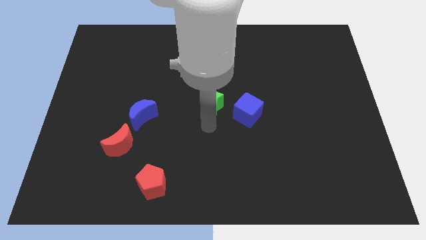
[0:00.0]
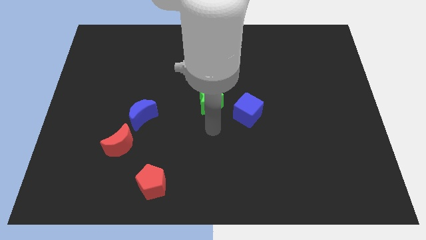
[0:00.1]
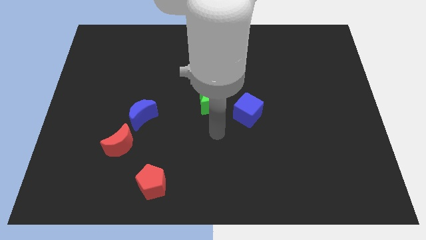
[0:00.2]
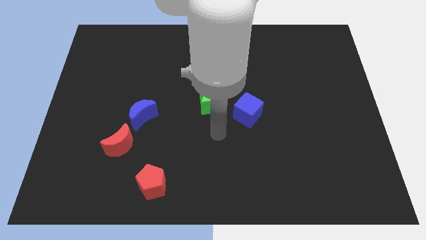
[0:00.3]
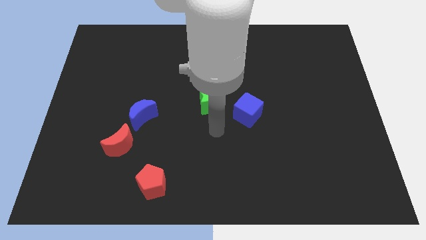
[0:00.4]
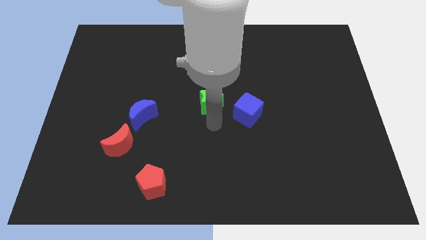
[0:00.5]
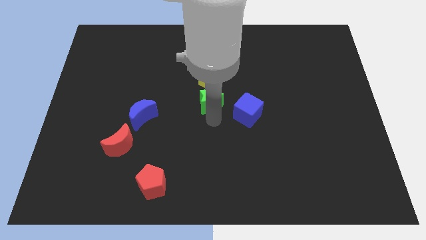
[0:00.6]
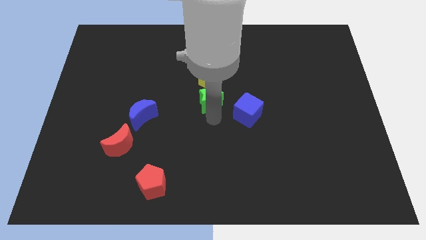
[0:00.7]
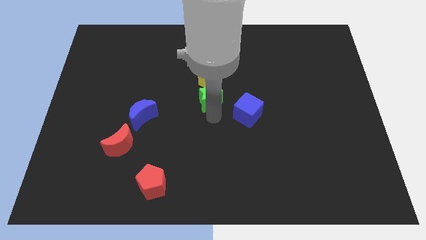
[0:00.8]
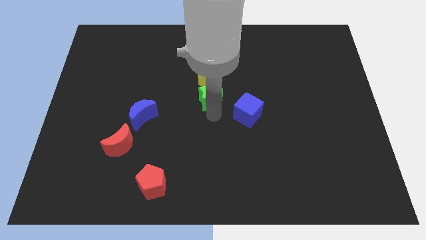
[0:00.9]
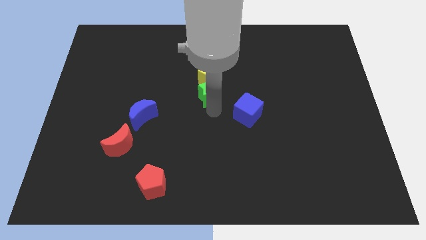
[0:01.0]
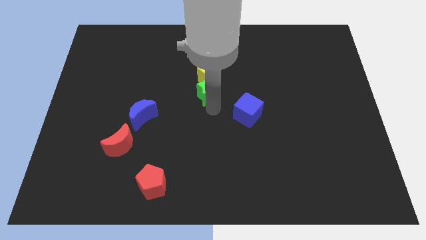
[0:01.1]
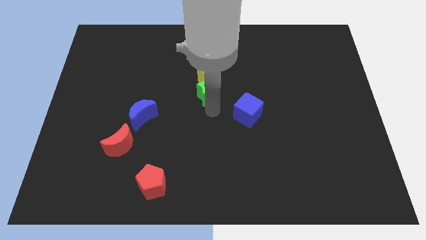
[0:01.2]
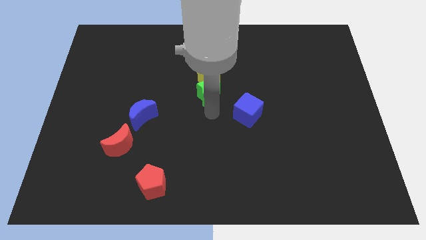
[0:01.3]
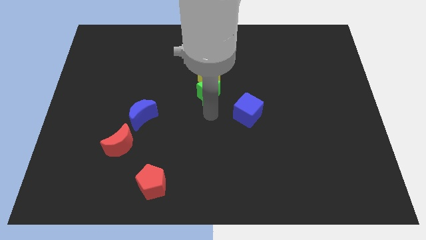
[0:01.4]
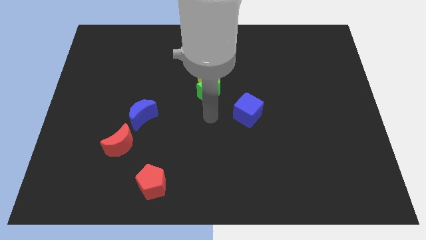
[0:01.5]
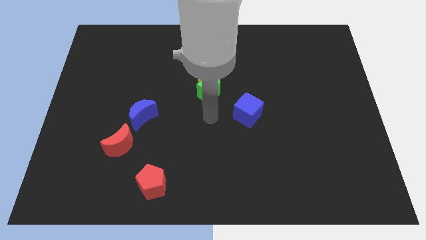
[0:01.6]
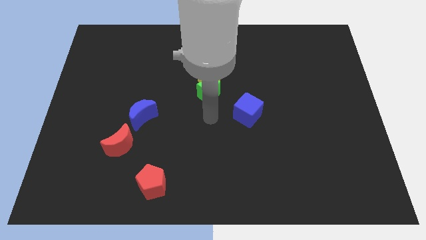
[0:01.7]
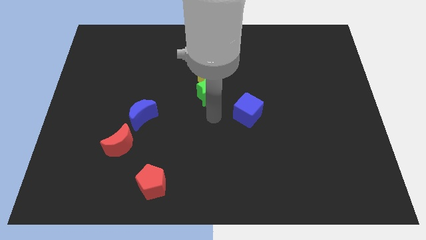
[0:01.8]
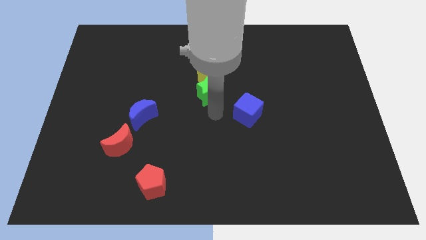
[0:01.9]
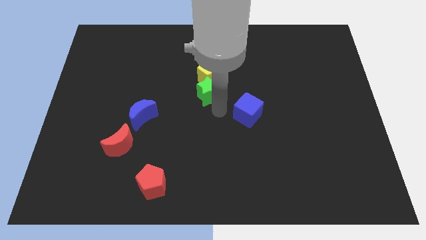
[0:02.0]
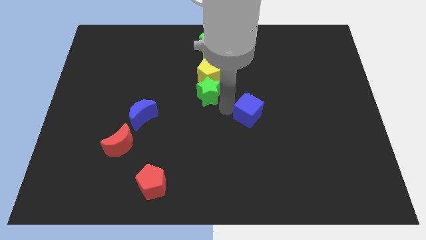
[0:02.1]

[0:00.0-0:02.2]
move the green star into the yellow pentagon

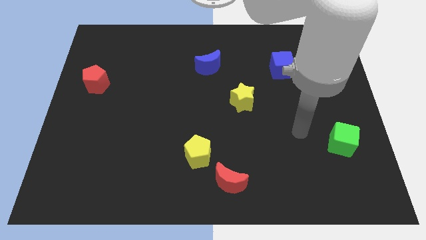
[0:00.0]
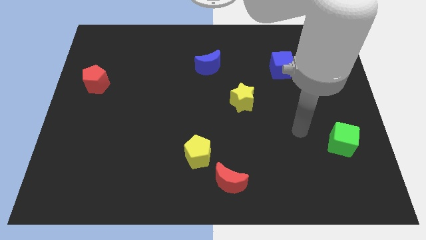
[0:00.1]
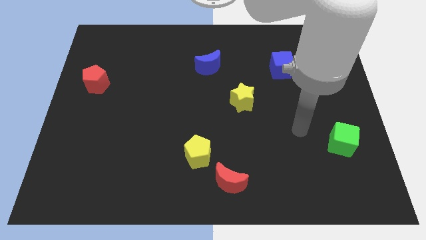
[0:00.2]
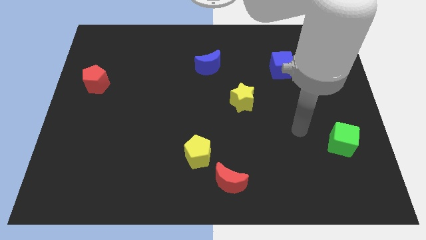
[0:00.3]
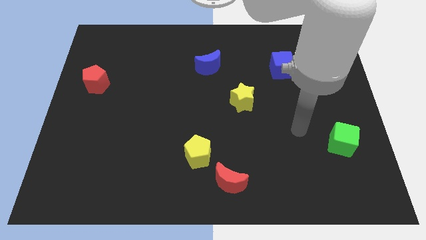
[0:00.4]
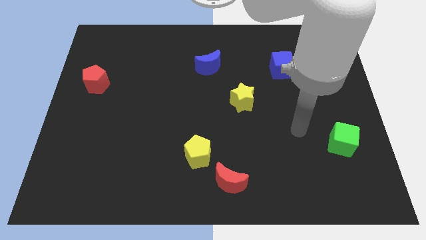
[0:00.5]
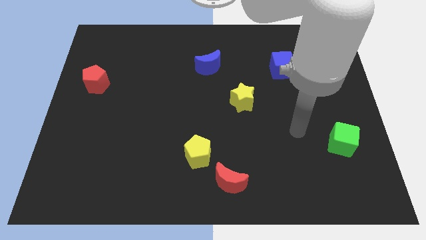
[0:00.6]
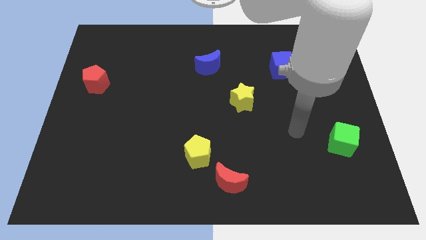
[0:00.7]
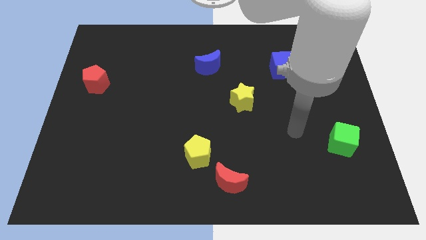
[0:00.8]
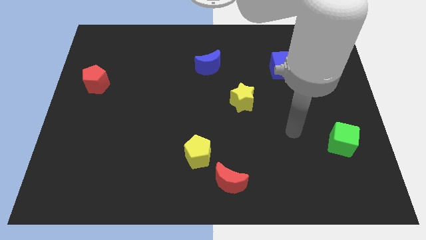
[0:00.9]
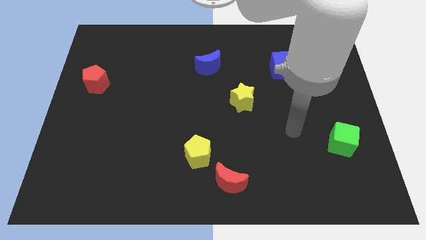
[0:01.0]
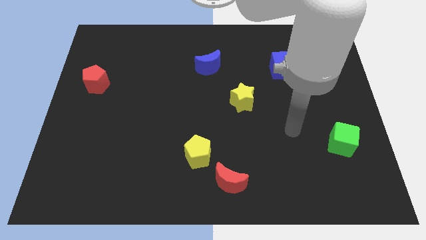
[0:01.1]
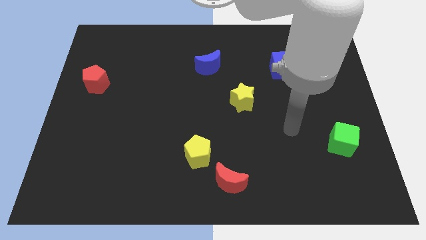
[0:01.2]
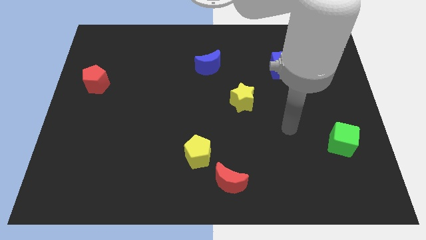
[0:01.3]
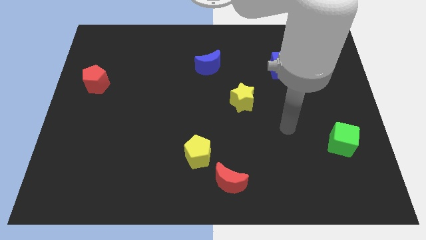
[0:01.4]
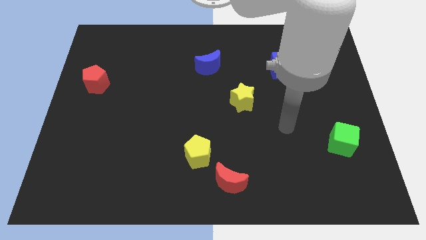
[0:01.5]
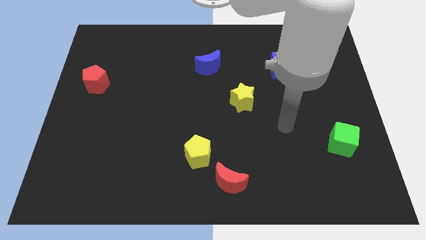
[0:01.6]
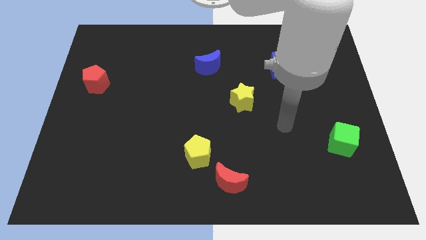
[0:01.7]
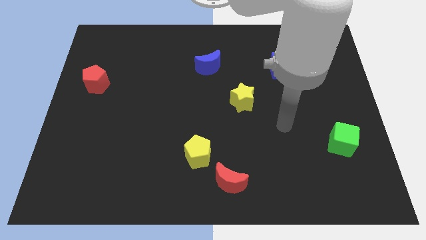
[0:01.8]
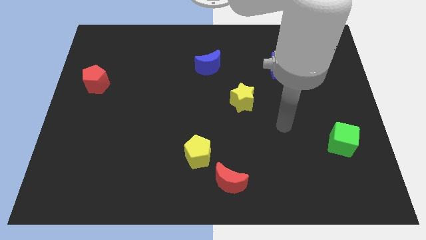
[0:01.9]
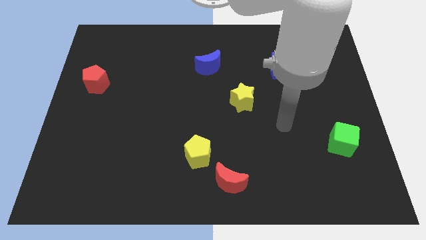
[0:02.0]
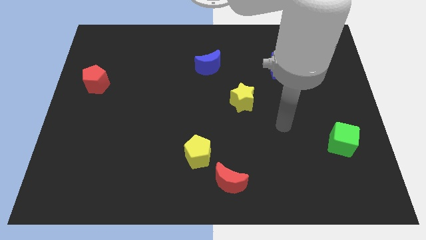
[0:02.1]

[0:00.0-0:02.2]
move the arm towards the yellow star

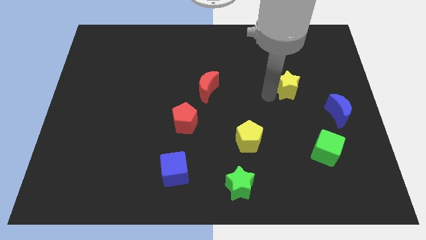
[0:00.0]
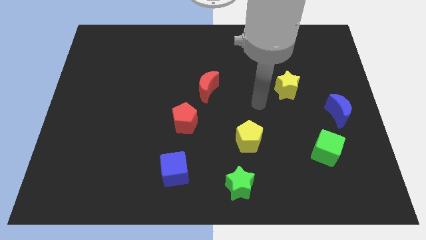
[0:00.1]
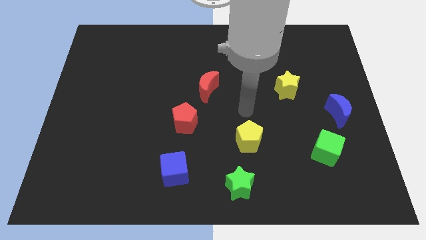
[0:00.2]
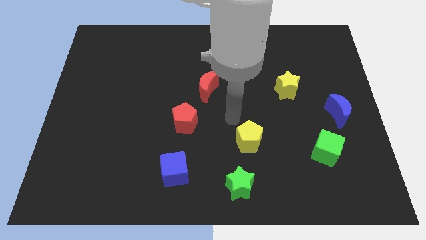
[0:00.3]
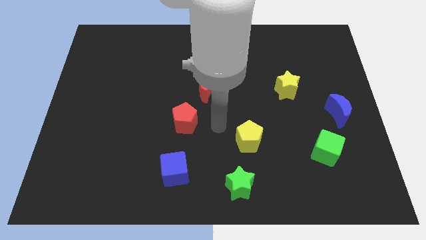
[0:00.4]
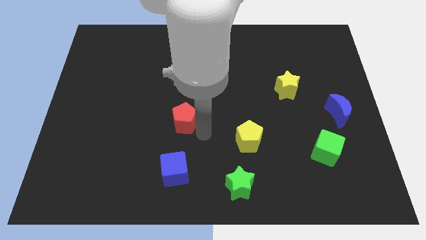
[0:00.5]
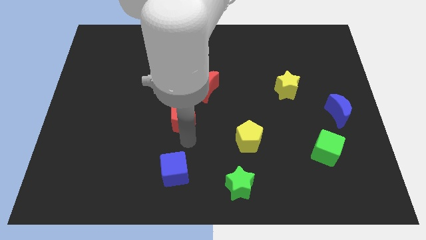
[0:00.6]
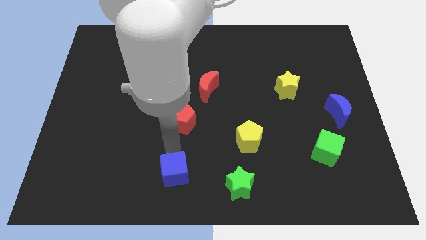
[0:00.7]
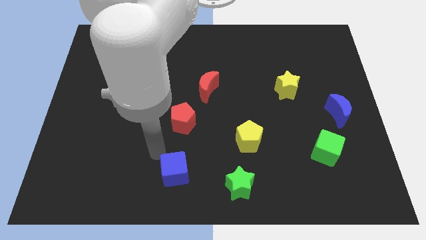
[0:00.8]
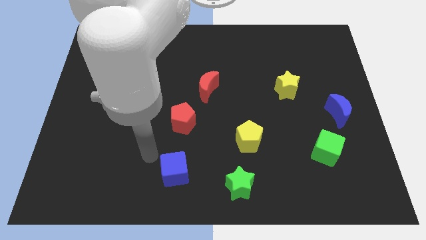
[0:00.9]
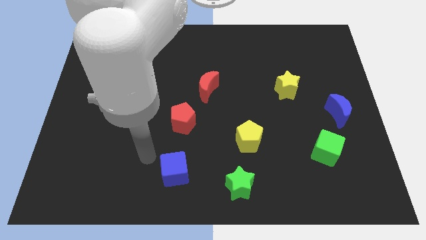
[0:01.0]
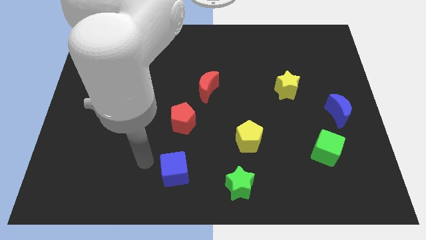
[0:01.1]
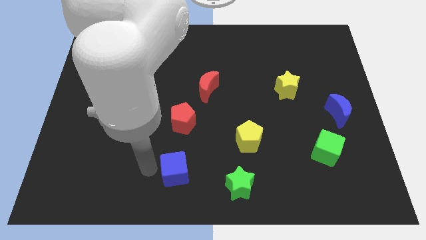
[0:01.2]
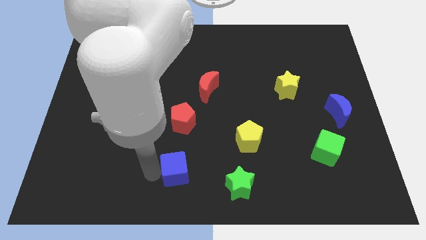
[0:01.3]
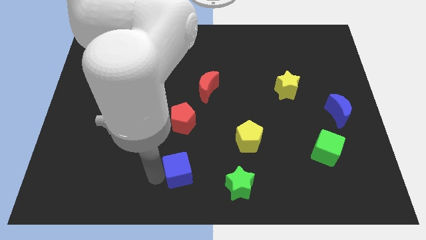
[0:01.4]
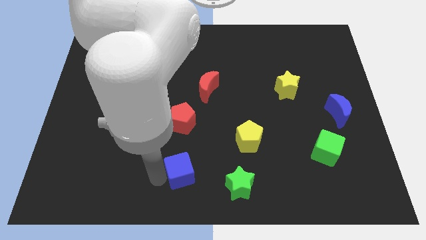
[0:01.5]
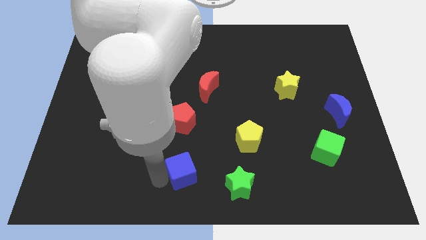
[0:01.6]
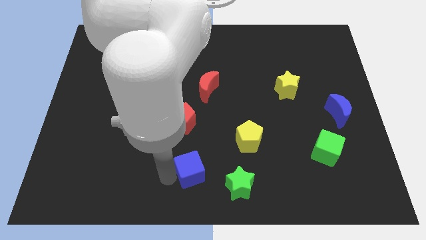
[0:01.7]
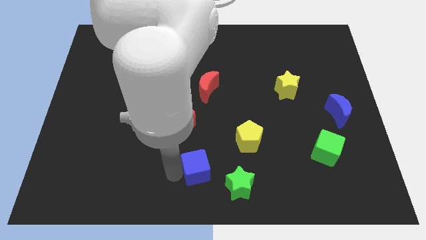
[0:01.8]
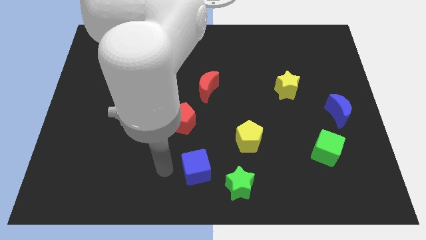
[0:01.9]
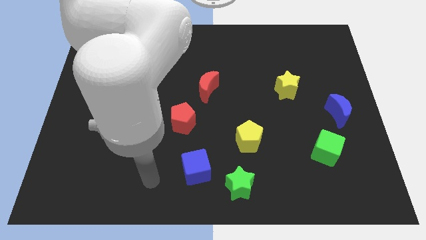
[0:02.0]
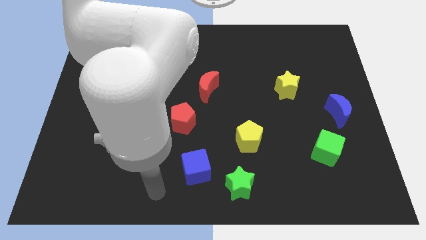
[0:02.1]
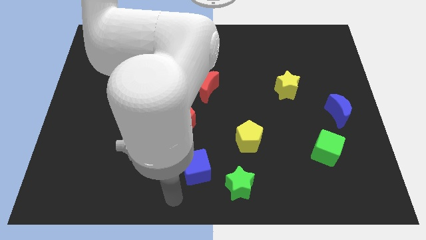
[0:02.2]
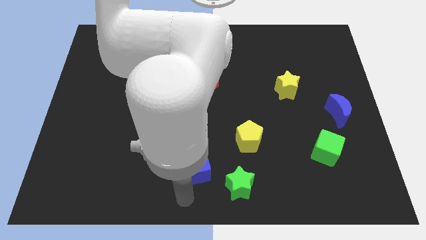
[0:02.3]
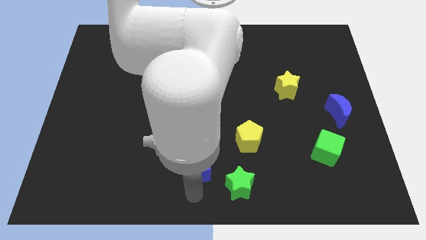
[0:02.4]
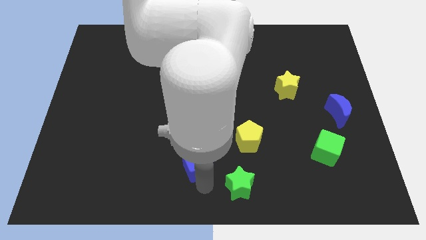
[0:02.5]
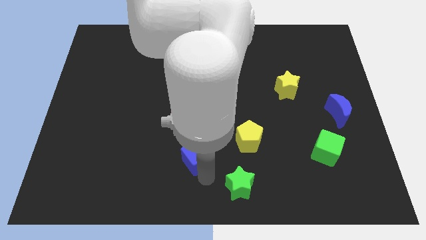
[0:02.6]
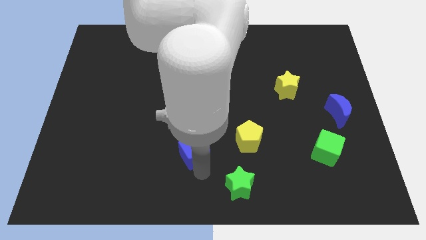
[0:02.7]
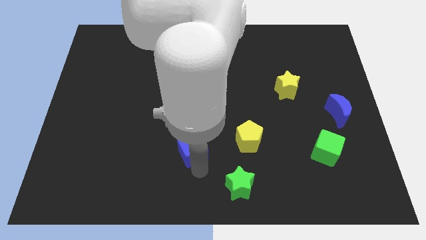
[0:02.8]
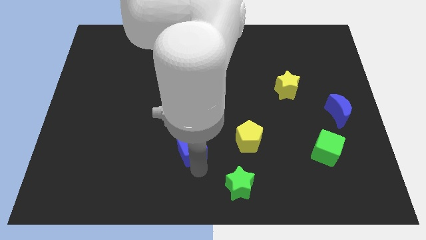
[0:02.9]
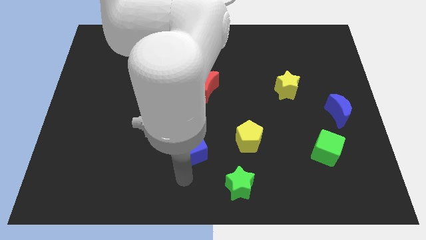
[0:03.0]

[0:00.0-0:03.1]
push the blue cube close to the red pentagon

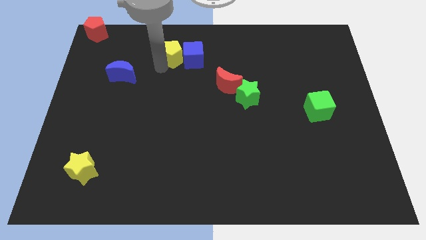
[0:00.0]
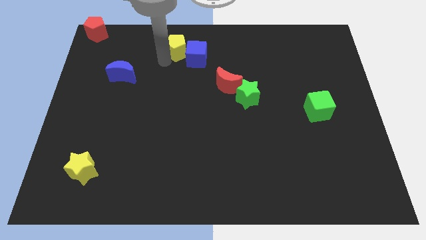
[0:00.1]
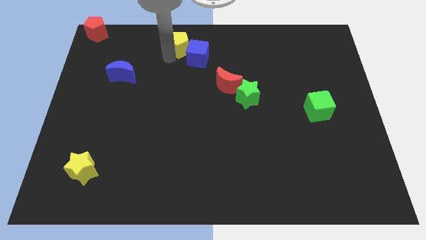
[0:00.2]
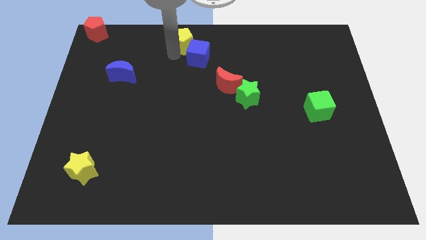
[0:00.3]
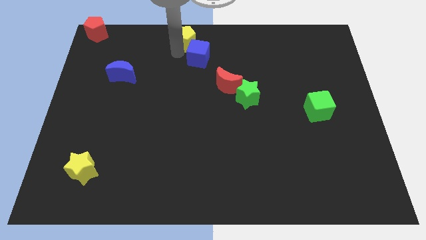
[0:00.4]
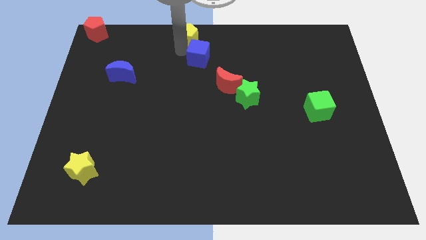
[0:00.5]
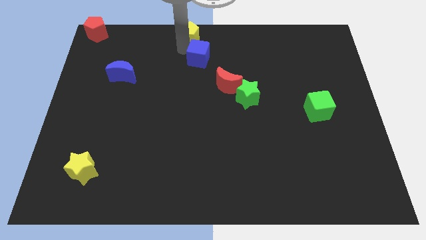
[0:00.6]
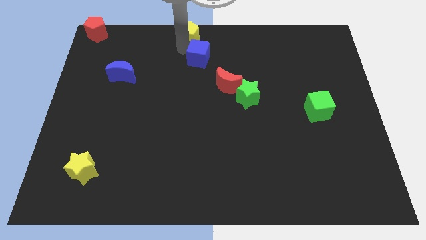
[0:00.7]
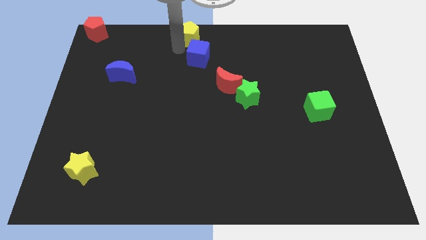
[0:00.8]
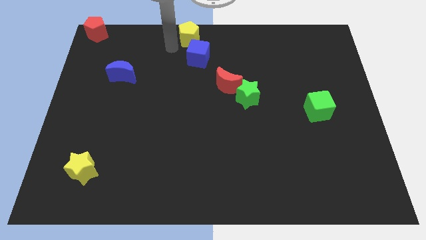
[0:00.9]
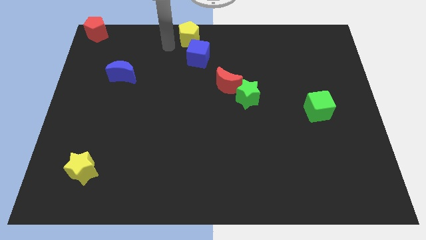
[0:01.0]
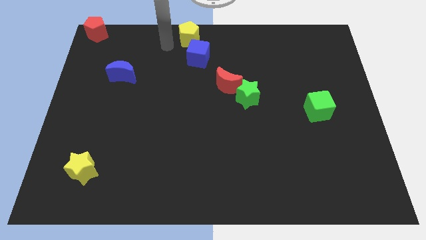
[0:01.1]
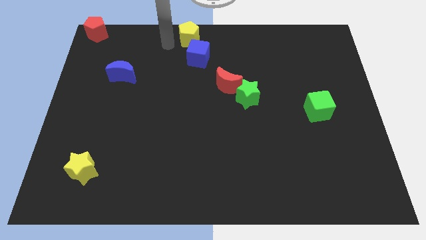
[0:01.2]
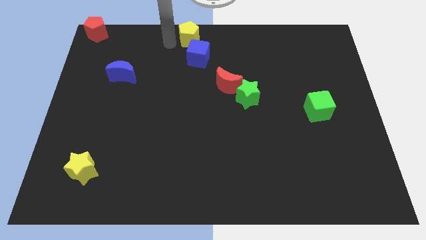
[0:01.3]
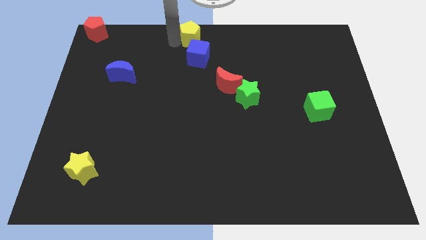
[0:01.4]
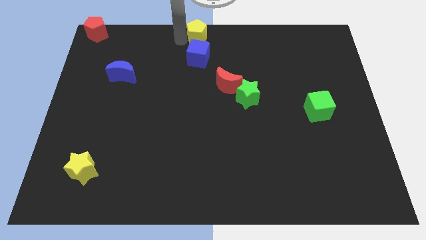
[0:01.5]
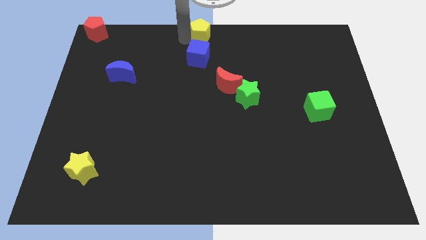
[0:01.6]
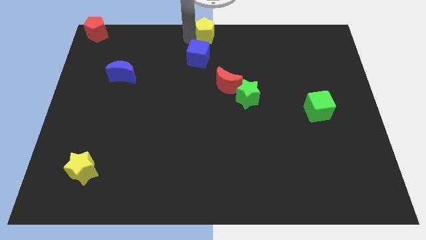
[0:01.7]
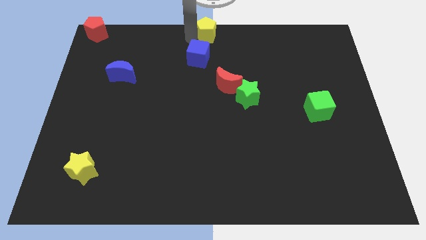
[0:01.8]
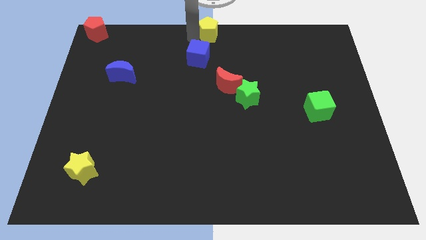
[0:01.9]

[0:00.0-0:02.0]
separate the yellow pentagon from the blue cube
